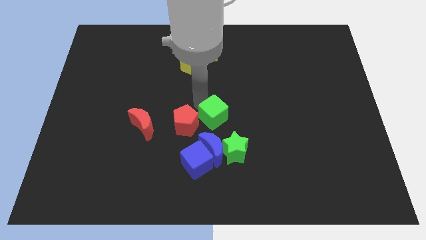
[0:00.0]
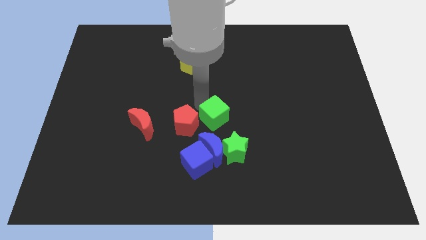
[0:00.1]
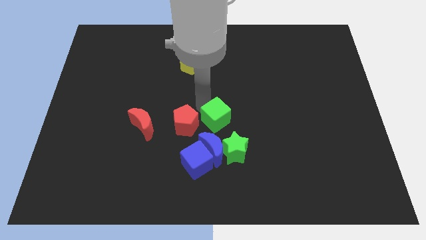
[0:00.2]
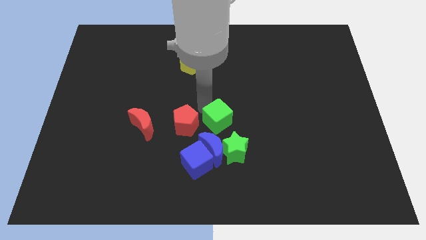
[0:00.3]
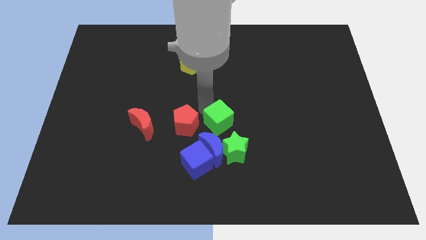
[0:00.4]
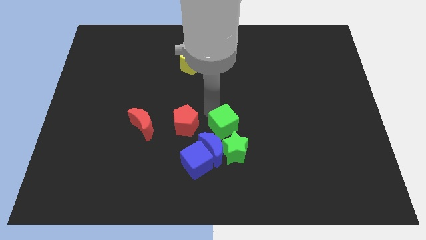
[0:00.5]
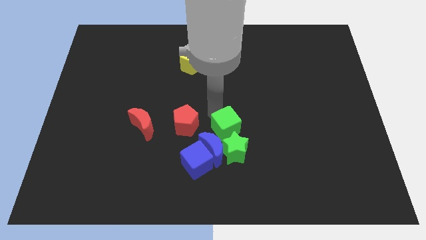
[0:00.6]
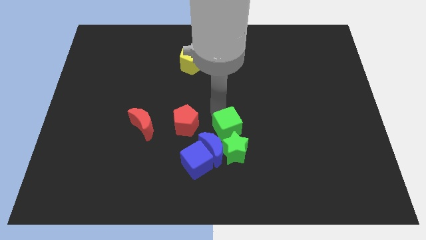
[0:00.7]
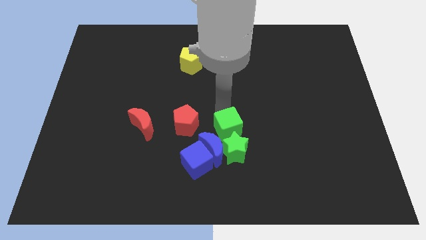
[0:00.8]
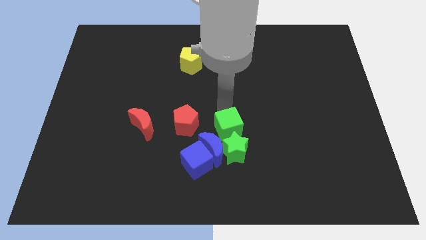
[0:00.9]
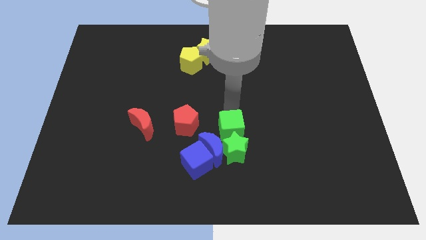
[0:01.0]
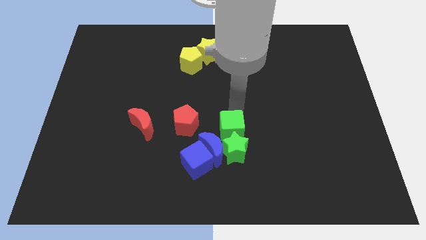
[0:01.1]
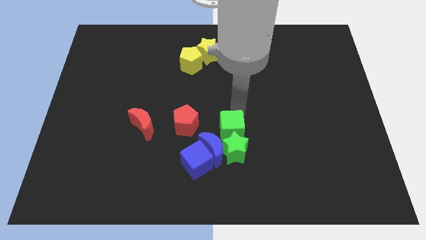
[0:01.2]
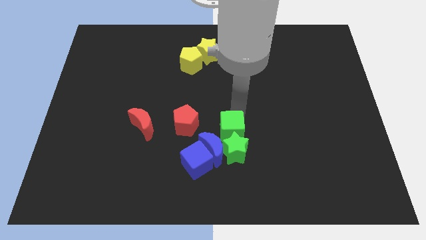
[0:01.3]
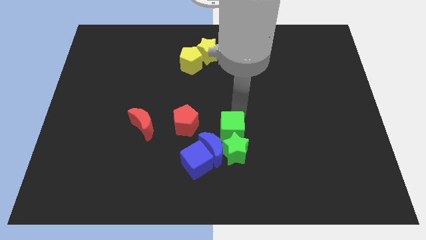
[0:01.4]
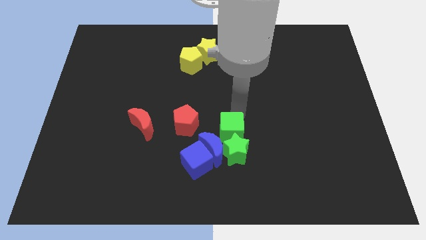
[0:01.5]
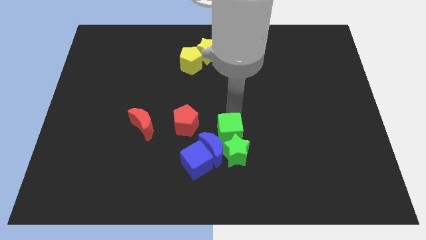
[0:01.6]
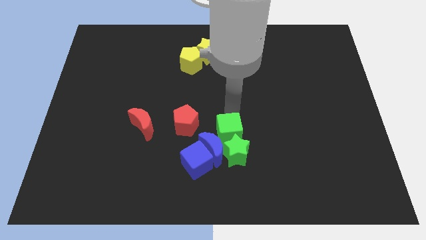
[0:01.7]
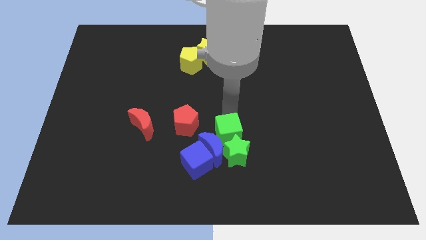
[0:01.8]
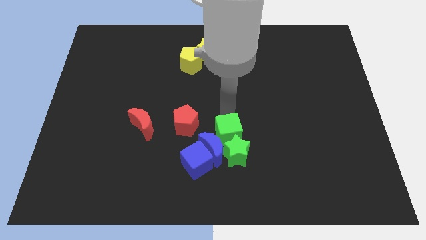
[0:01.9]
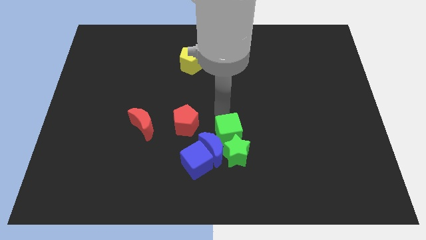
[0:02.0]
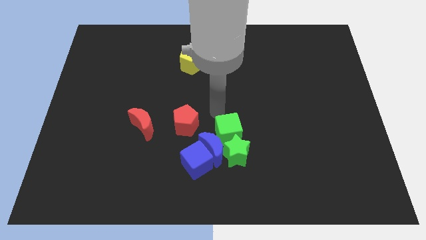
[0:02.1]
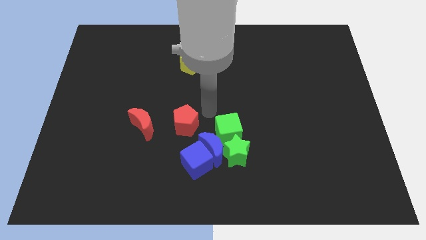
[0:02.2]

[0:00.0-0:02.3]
move the green cube on top of the green star

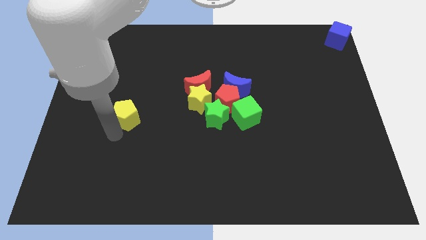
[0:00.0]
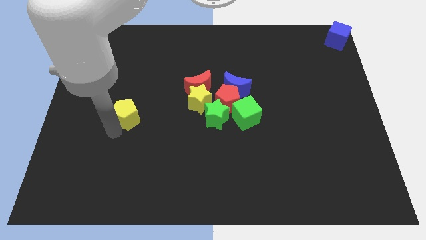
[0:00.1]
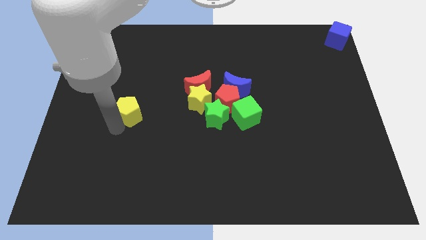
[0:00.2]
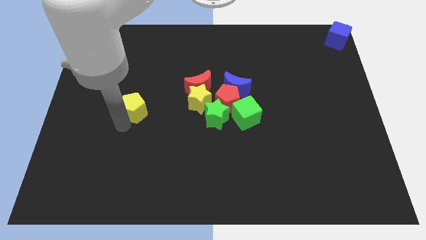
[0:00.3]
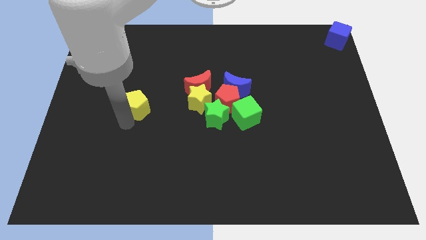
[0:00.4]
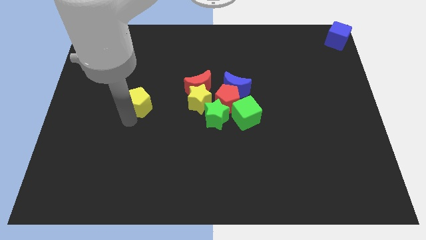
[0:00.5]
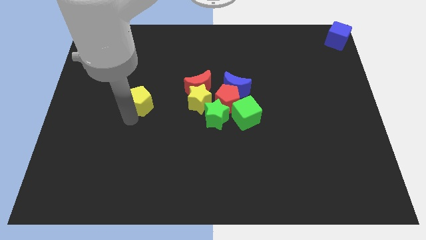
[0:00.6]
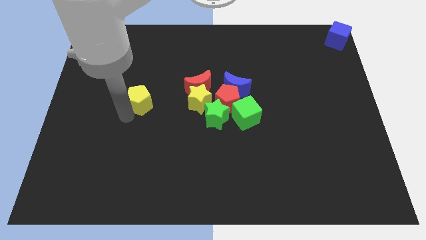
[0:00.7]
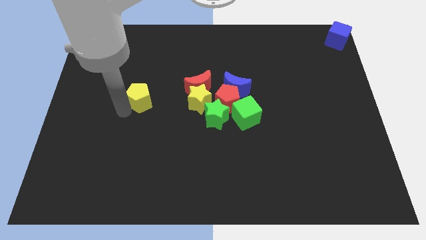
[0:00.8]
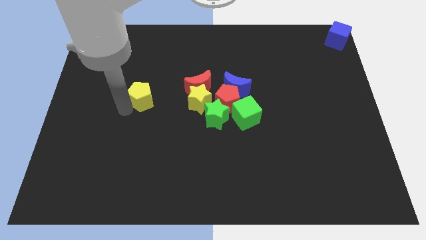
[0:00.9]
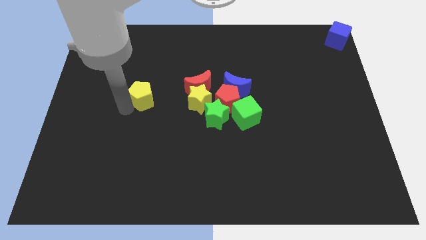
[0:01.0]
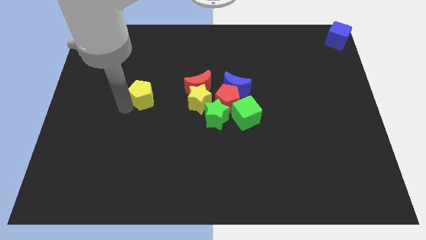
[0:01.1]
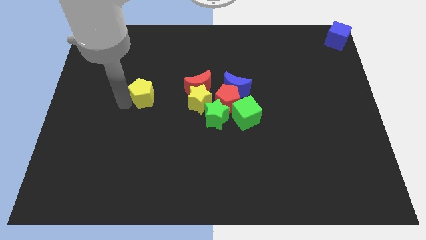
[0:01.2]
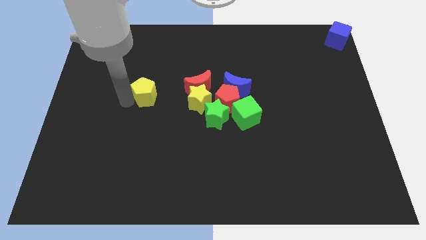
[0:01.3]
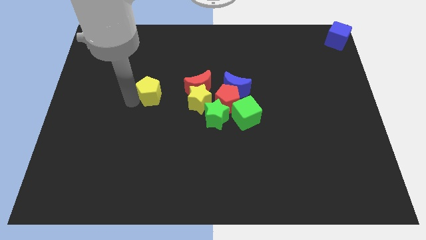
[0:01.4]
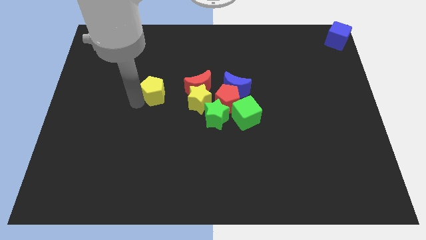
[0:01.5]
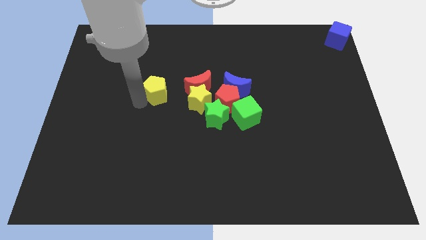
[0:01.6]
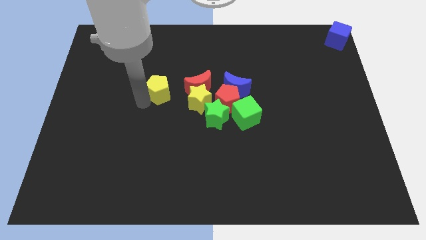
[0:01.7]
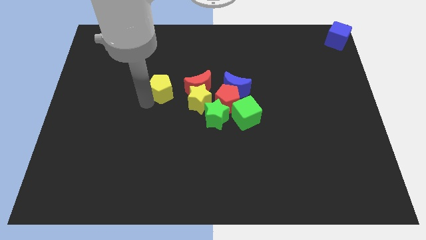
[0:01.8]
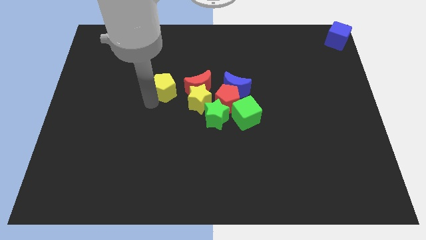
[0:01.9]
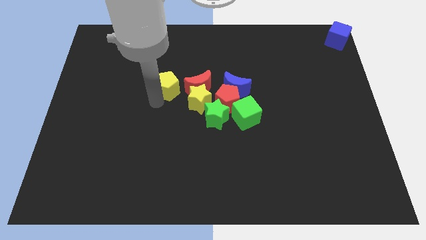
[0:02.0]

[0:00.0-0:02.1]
place the yellow pentagon to the left side of the red moon

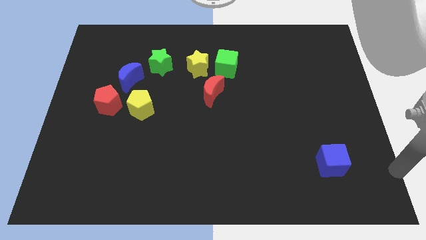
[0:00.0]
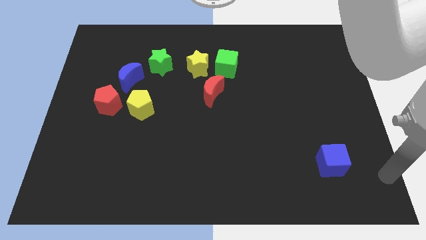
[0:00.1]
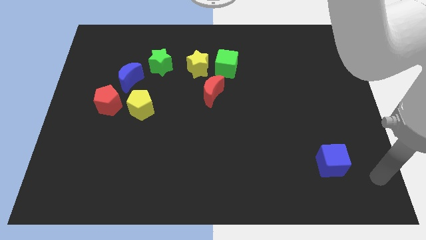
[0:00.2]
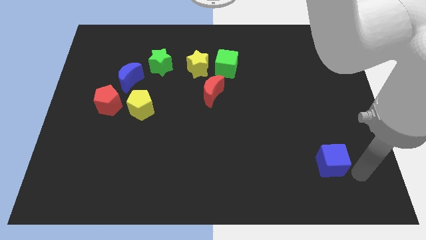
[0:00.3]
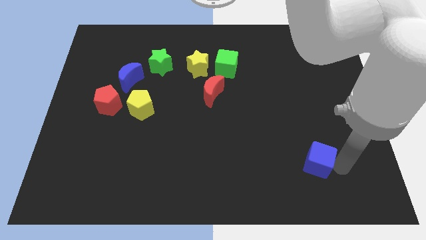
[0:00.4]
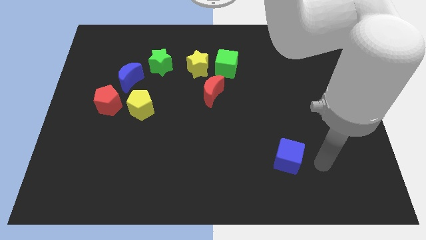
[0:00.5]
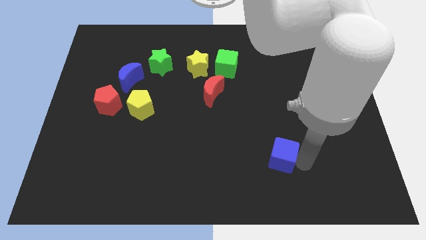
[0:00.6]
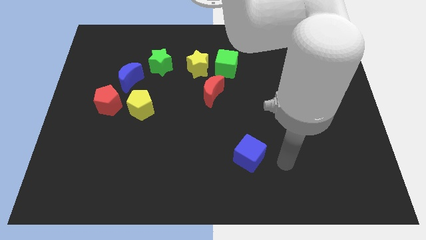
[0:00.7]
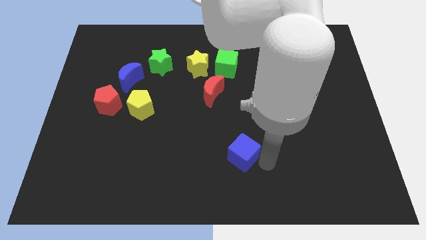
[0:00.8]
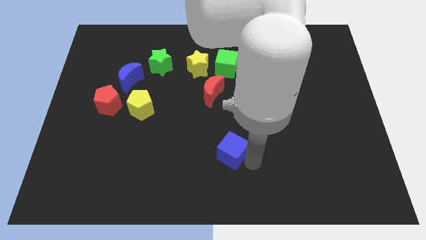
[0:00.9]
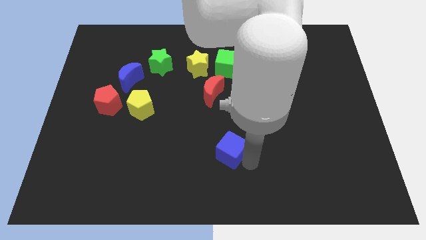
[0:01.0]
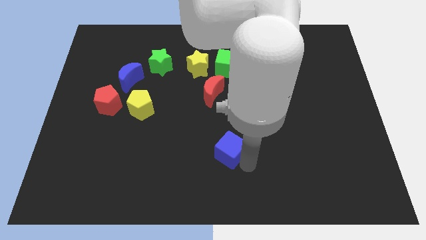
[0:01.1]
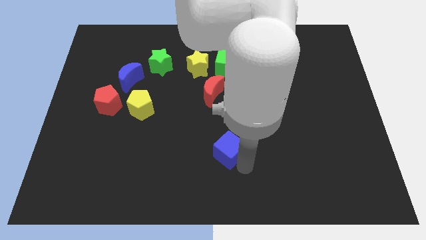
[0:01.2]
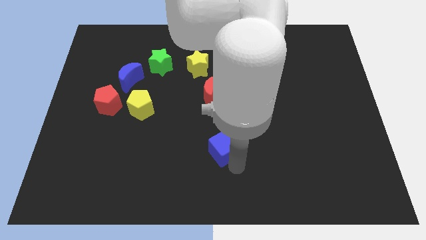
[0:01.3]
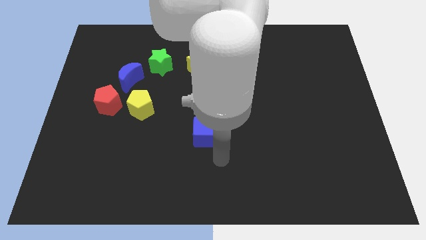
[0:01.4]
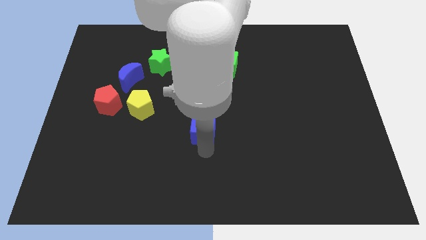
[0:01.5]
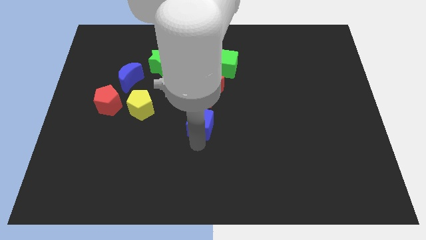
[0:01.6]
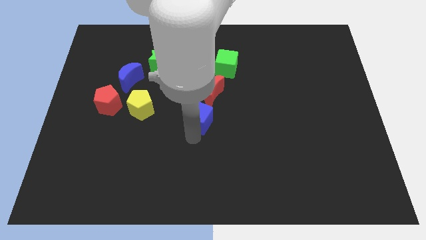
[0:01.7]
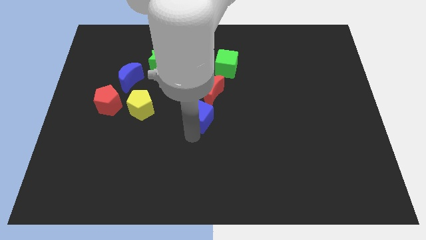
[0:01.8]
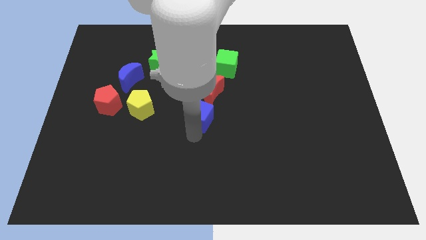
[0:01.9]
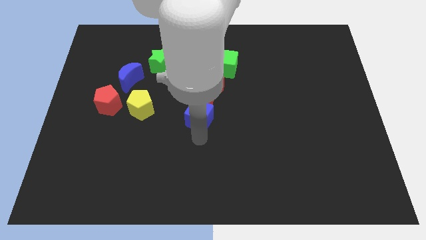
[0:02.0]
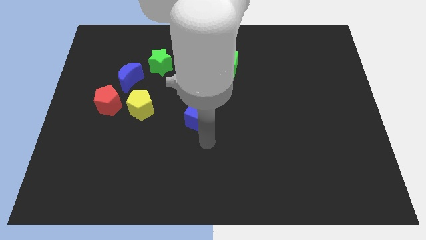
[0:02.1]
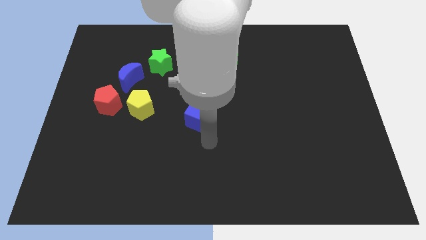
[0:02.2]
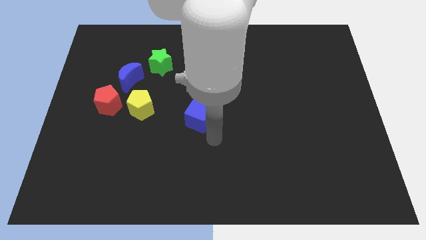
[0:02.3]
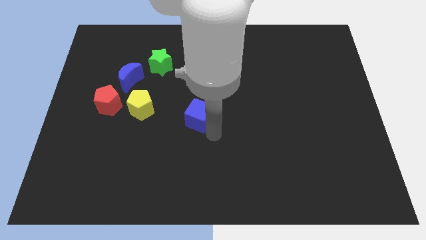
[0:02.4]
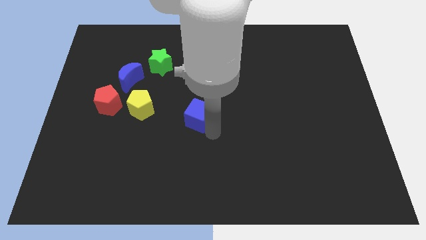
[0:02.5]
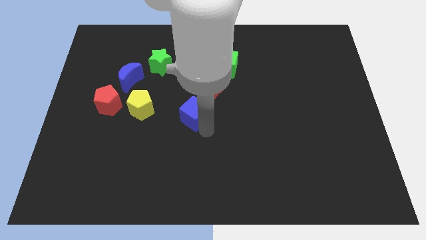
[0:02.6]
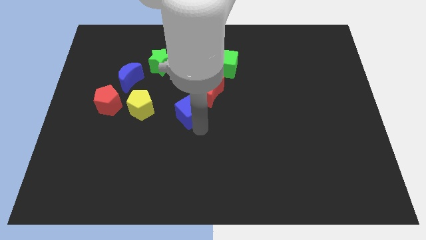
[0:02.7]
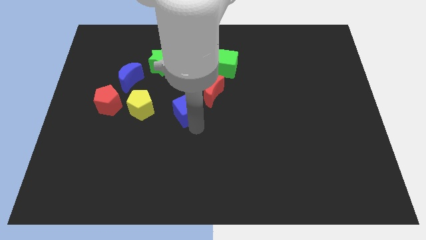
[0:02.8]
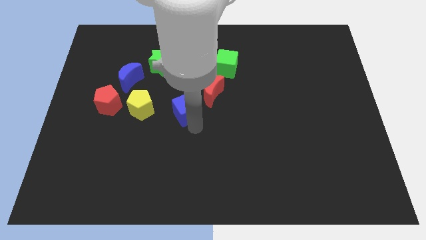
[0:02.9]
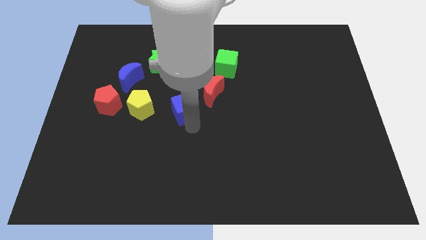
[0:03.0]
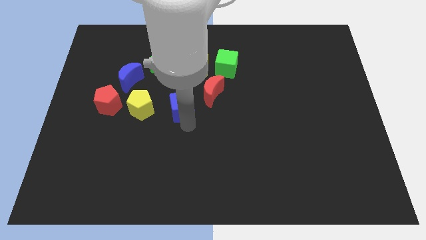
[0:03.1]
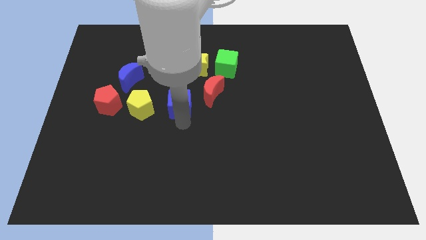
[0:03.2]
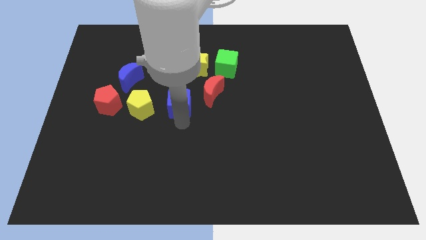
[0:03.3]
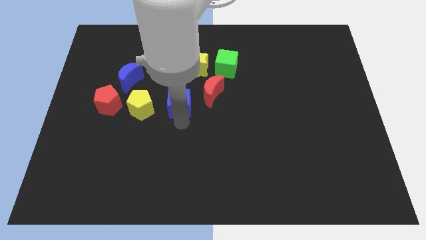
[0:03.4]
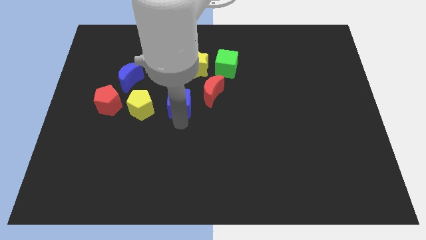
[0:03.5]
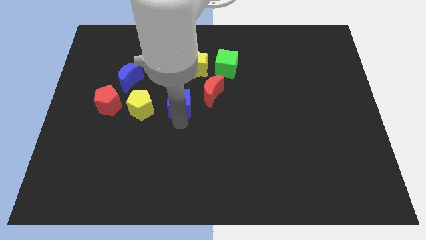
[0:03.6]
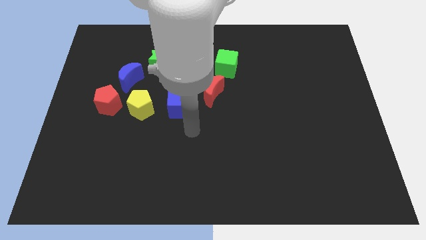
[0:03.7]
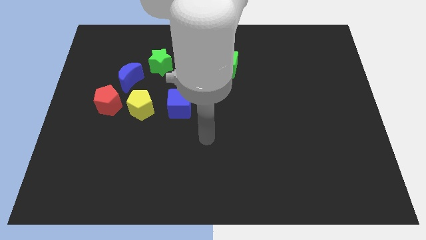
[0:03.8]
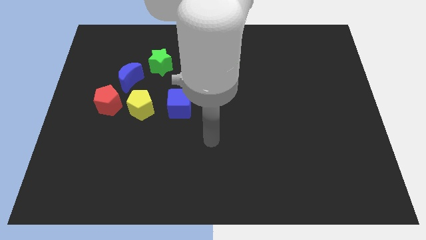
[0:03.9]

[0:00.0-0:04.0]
place the blue cube right to the yellow pentagon to form a horizontal line

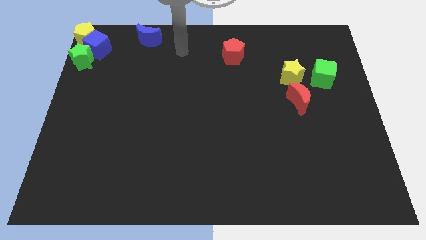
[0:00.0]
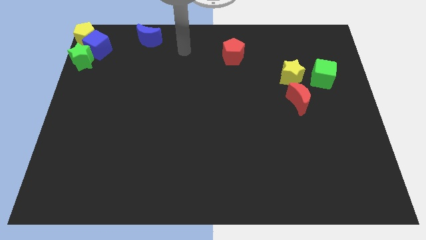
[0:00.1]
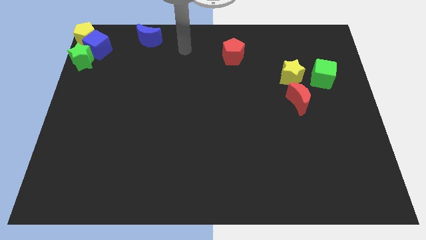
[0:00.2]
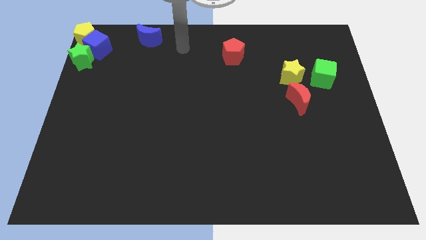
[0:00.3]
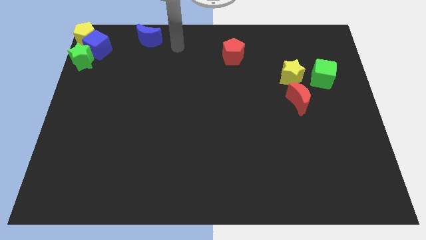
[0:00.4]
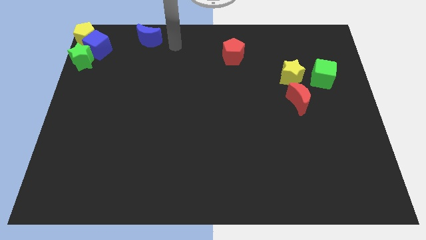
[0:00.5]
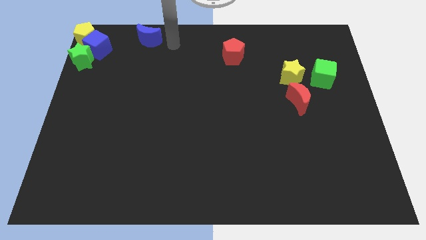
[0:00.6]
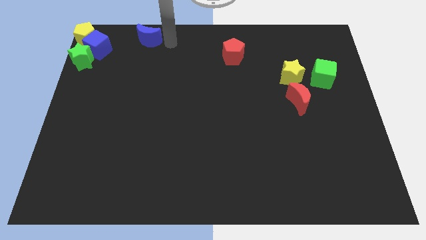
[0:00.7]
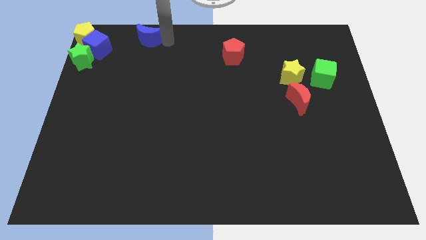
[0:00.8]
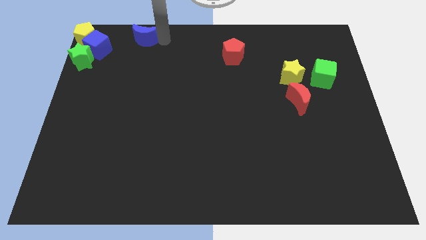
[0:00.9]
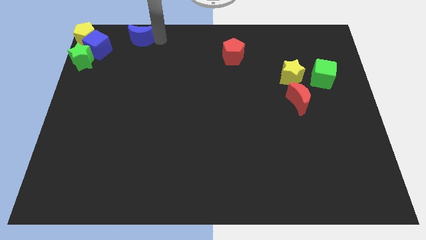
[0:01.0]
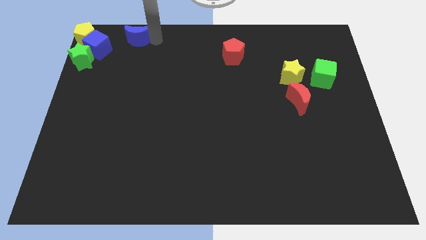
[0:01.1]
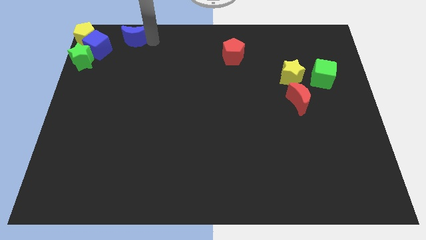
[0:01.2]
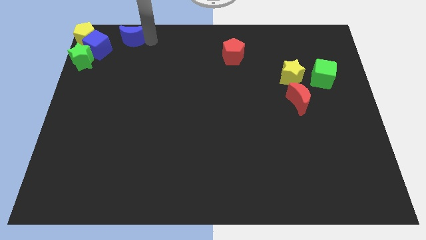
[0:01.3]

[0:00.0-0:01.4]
move the blue crescent towards the left side
